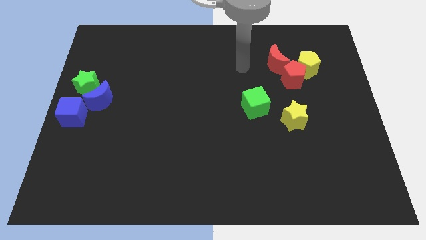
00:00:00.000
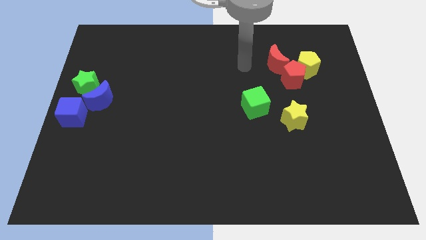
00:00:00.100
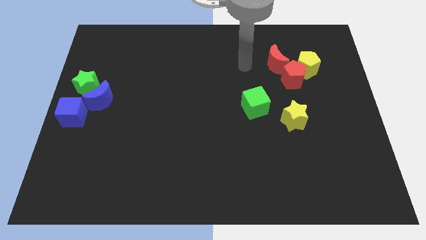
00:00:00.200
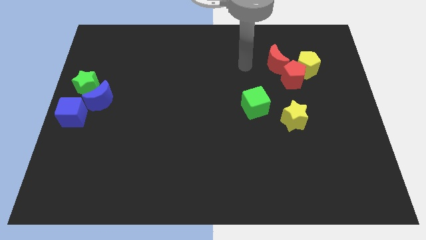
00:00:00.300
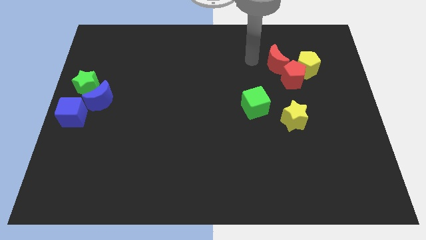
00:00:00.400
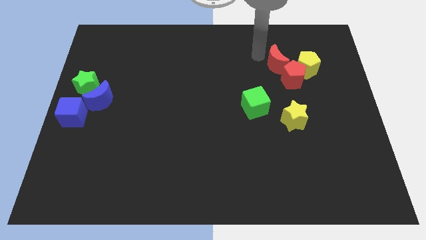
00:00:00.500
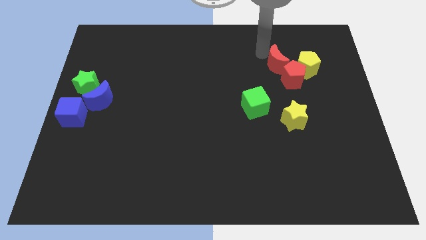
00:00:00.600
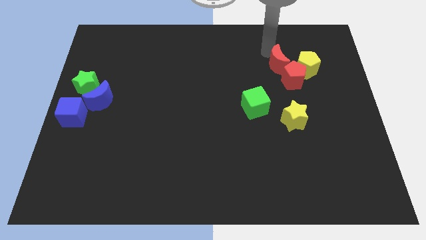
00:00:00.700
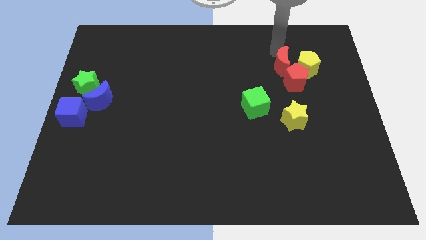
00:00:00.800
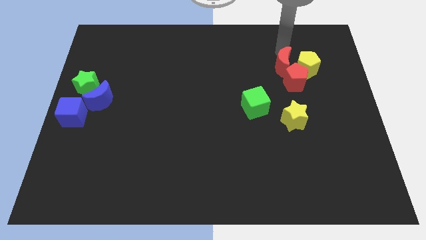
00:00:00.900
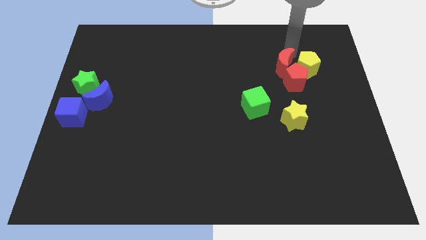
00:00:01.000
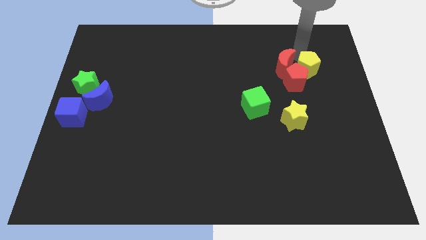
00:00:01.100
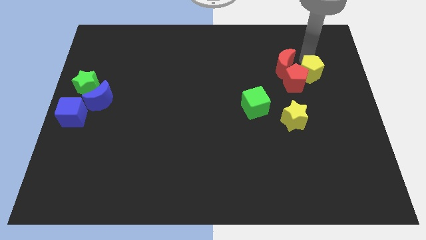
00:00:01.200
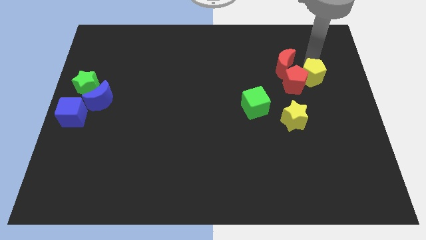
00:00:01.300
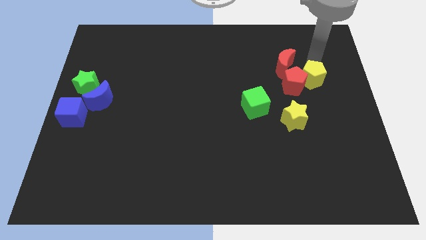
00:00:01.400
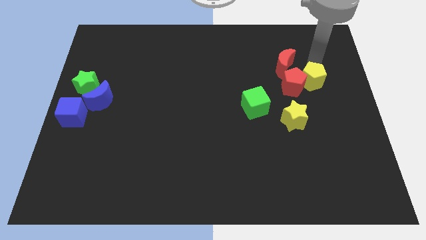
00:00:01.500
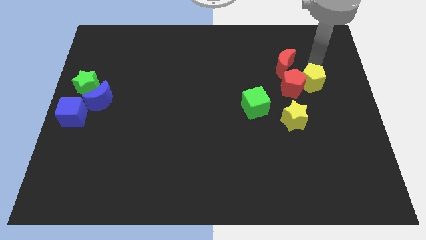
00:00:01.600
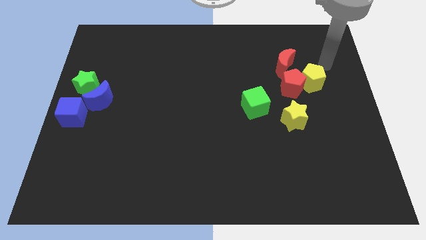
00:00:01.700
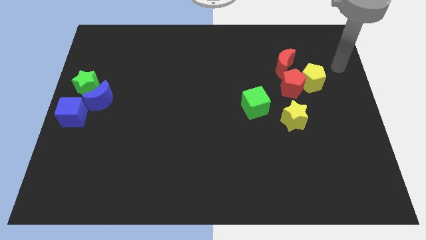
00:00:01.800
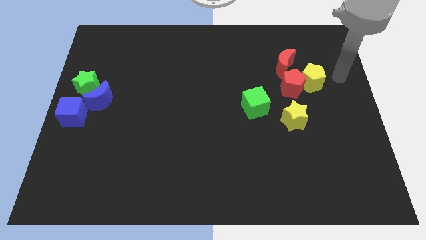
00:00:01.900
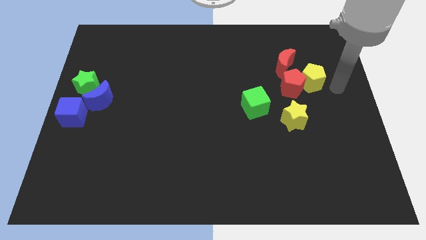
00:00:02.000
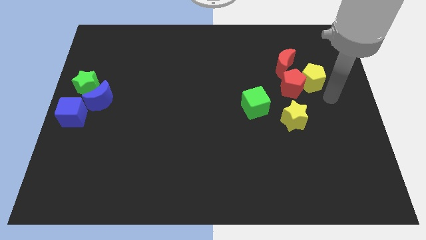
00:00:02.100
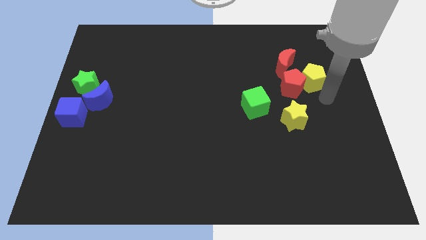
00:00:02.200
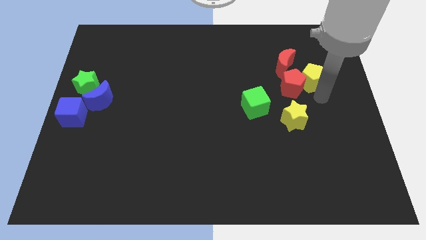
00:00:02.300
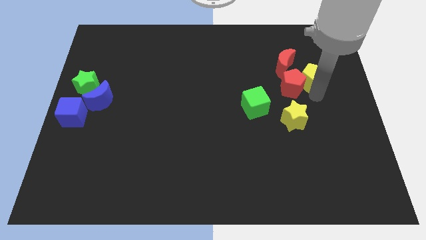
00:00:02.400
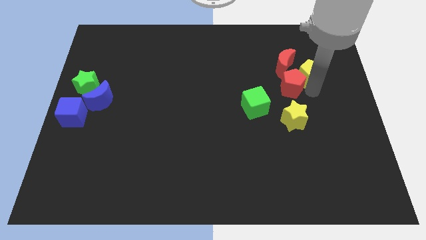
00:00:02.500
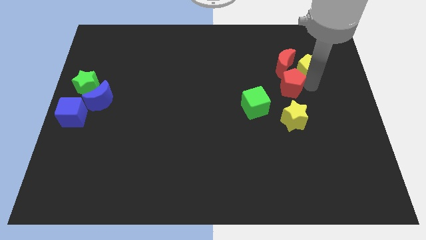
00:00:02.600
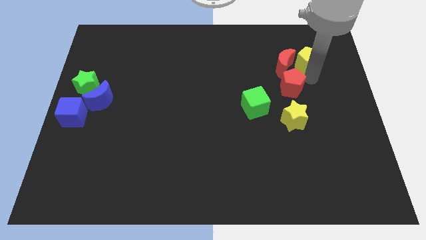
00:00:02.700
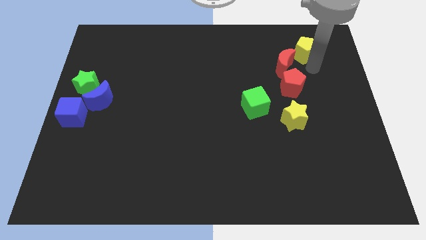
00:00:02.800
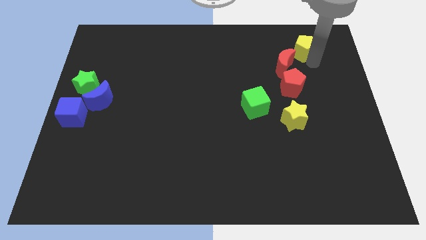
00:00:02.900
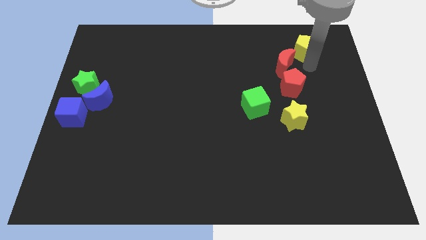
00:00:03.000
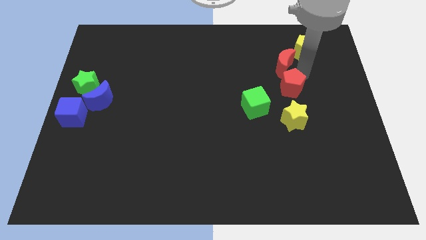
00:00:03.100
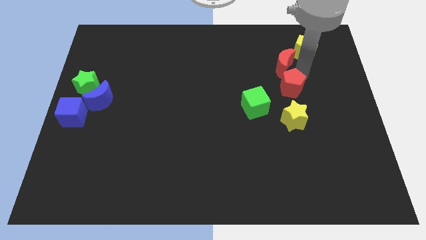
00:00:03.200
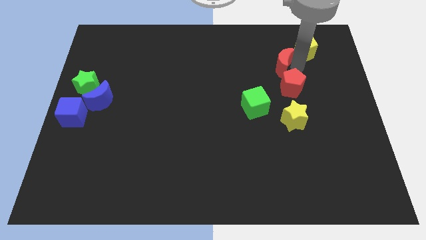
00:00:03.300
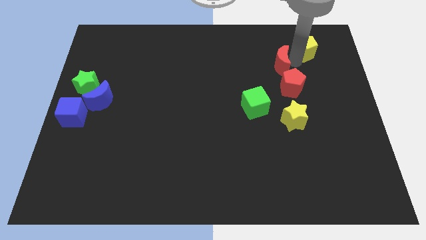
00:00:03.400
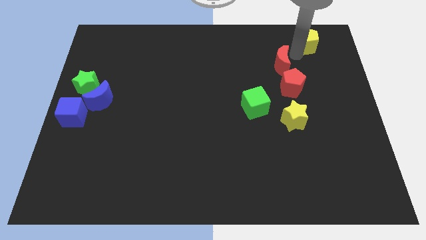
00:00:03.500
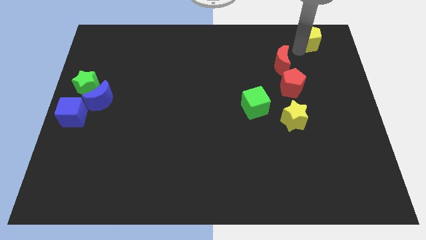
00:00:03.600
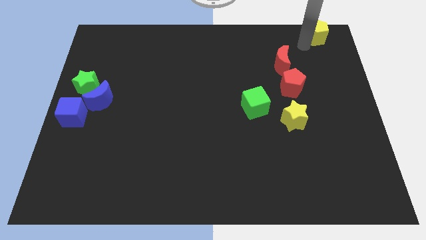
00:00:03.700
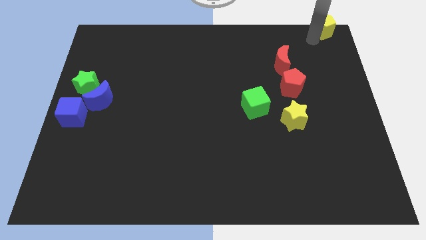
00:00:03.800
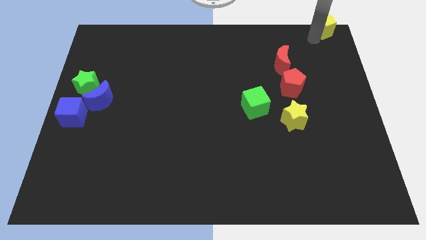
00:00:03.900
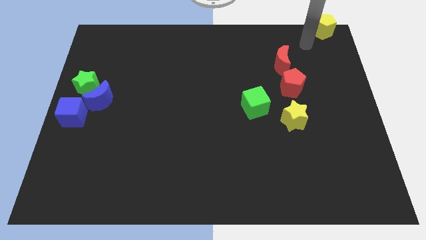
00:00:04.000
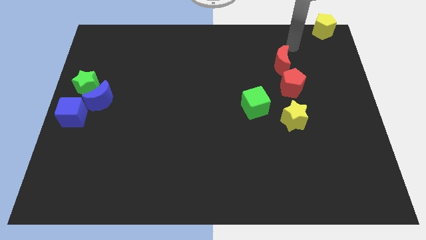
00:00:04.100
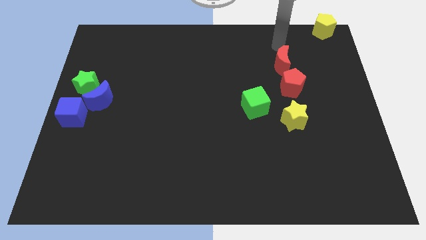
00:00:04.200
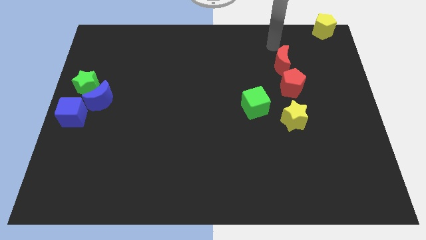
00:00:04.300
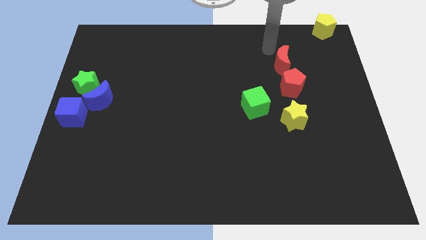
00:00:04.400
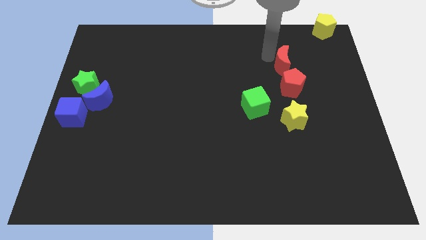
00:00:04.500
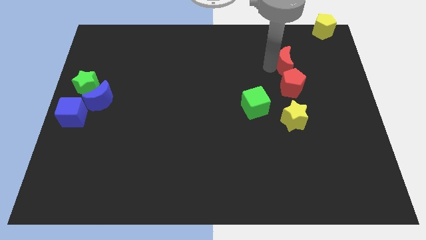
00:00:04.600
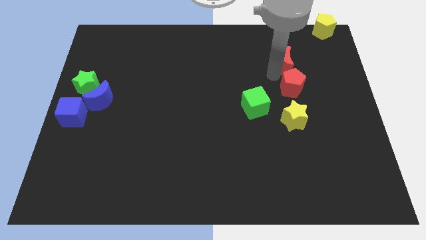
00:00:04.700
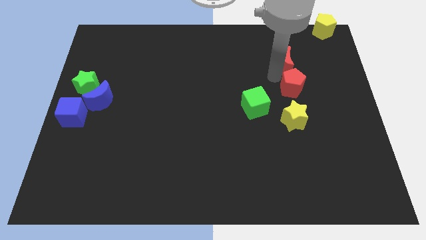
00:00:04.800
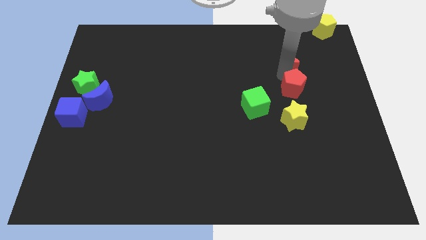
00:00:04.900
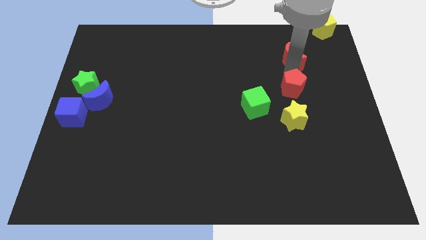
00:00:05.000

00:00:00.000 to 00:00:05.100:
slide the yellow pentagon to the top right of the board

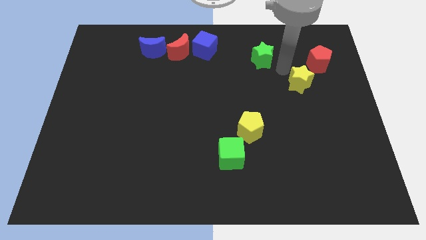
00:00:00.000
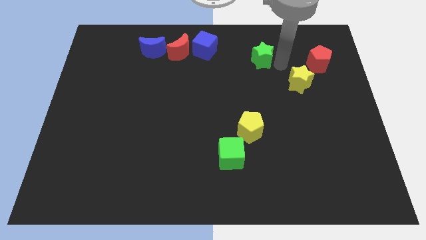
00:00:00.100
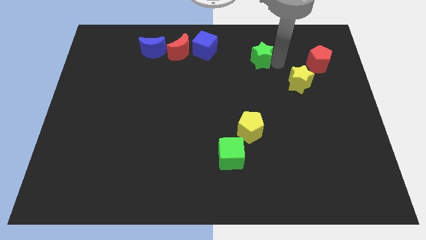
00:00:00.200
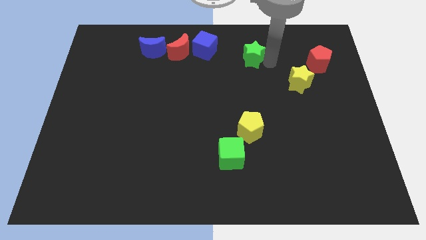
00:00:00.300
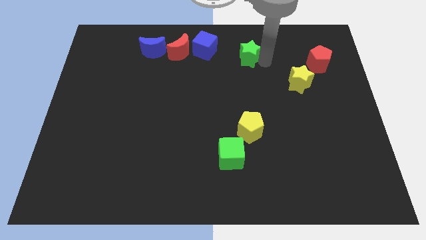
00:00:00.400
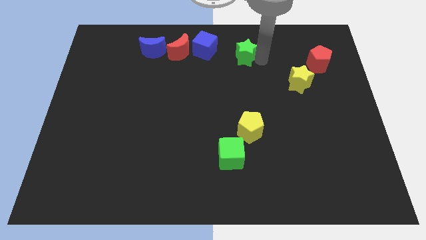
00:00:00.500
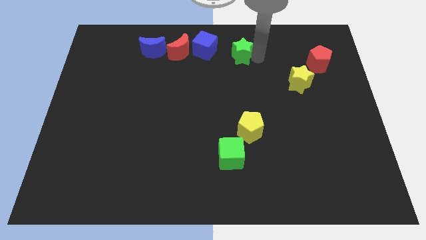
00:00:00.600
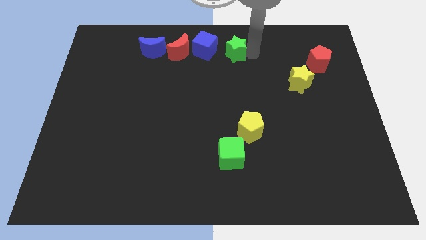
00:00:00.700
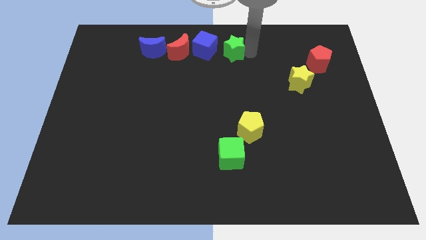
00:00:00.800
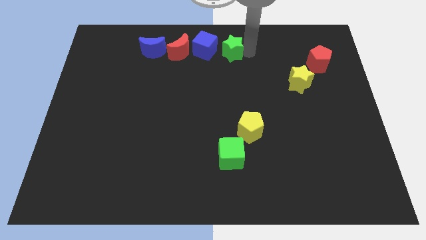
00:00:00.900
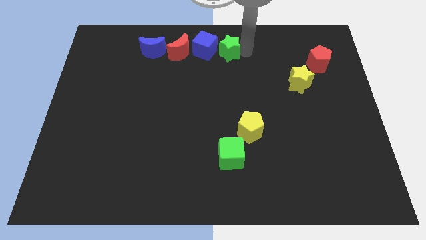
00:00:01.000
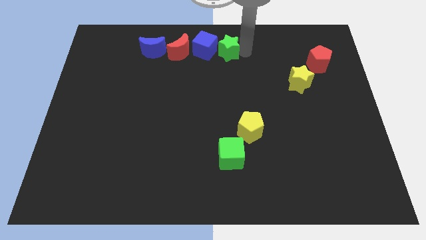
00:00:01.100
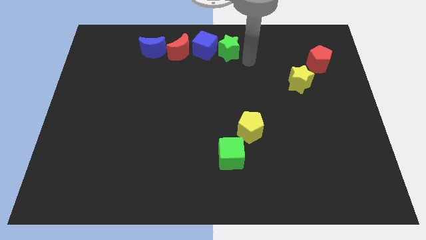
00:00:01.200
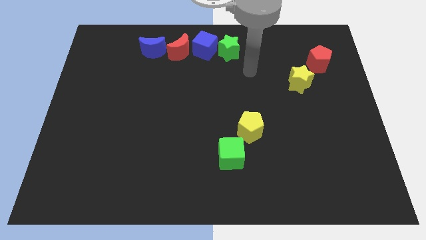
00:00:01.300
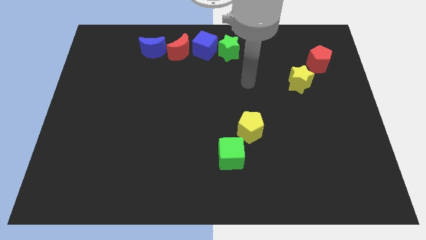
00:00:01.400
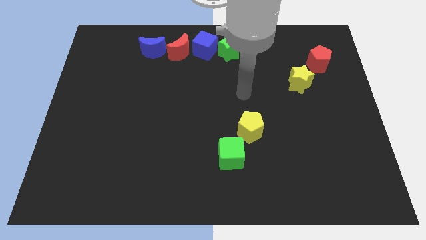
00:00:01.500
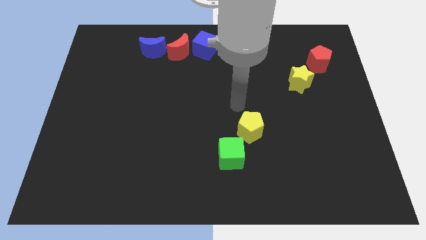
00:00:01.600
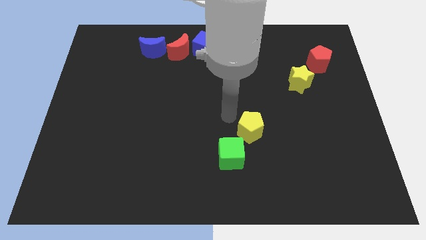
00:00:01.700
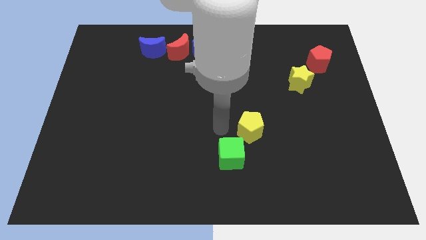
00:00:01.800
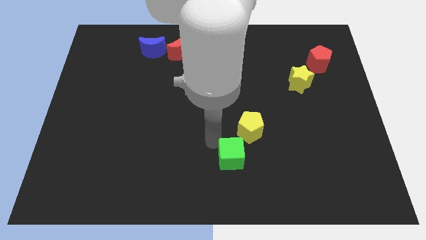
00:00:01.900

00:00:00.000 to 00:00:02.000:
push the green star towards the blue cube

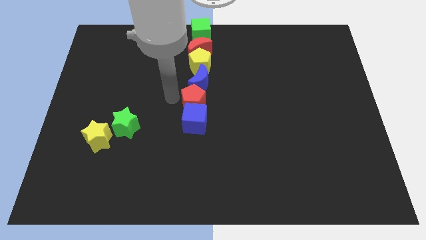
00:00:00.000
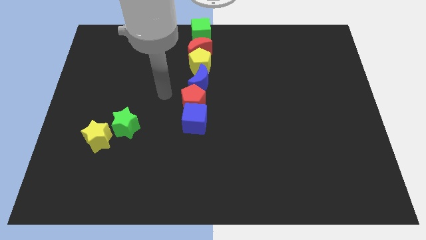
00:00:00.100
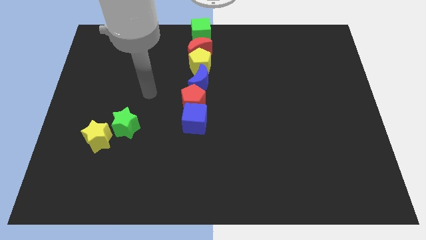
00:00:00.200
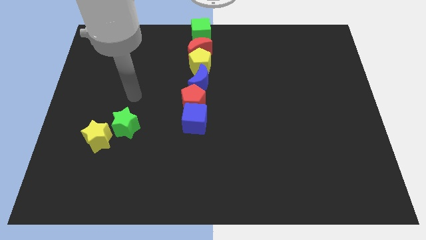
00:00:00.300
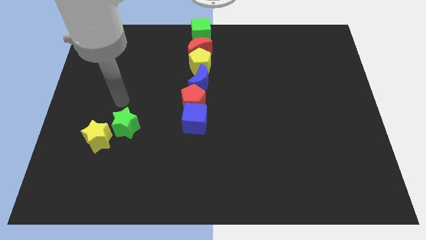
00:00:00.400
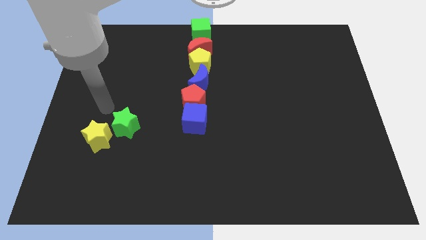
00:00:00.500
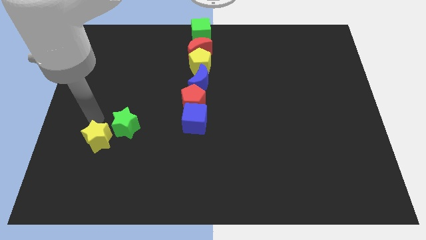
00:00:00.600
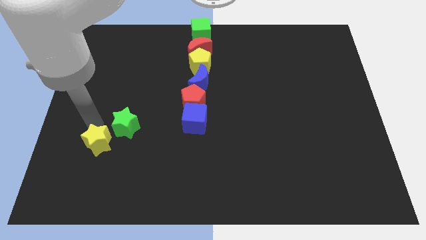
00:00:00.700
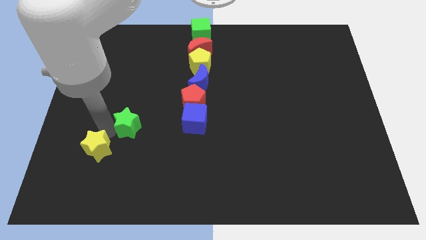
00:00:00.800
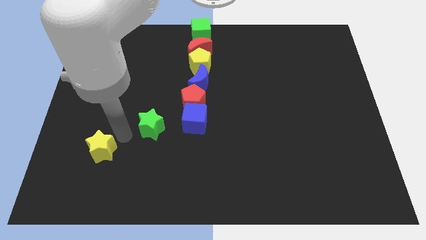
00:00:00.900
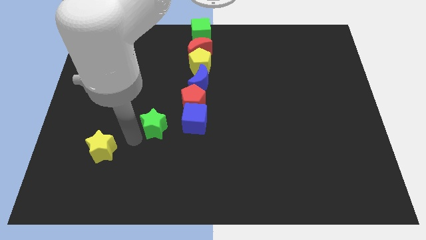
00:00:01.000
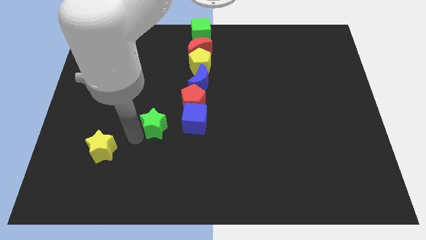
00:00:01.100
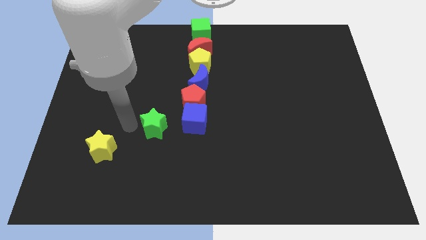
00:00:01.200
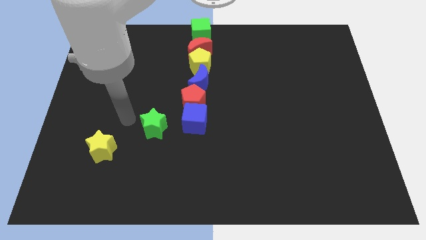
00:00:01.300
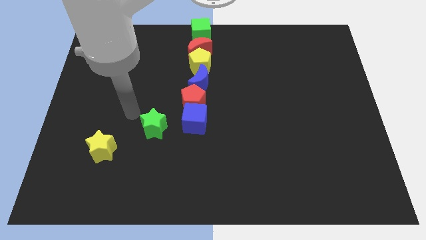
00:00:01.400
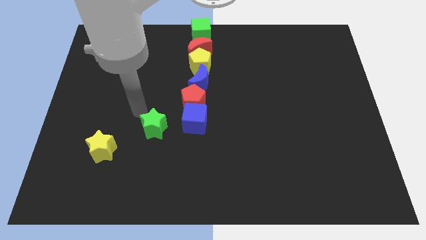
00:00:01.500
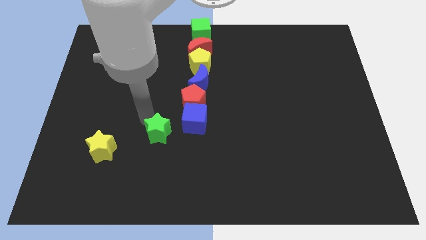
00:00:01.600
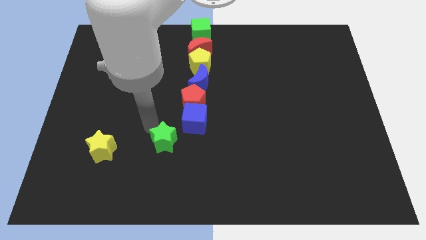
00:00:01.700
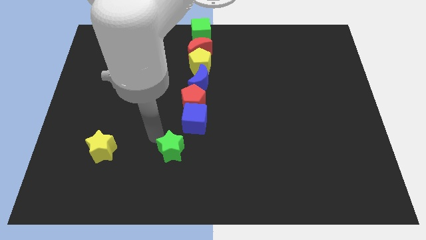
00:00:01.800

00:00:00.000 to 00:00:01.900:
move the green star to the bottom left of the blue cube
